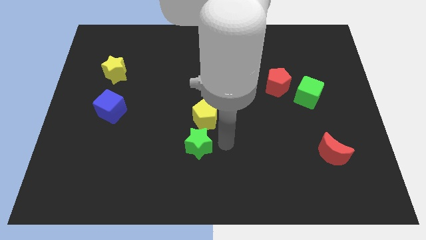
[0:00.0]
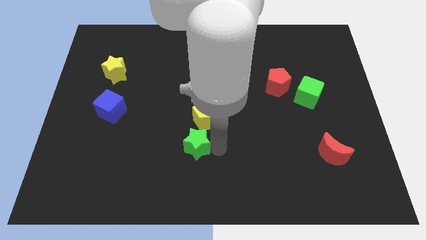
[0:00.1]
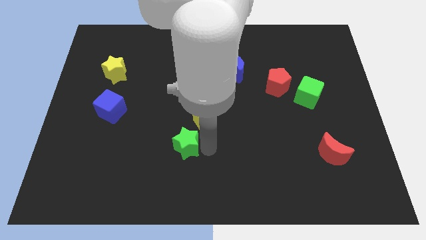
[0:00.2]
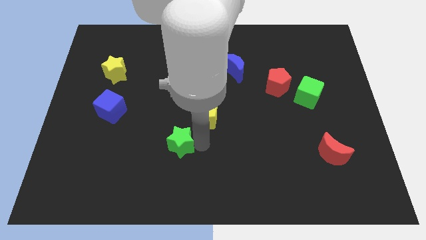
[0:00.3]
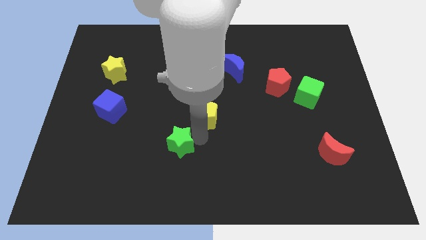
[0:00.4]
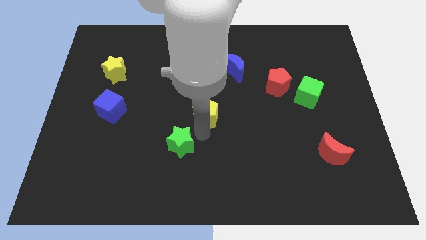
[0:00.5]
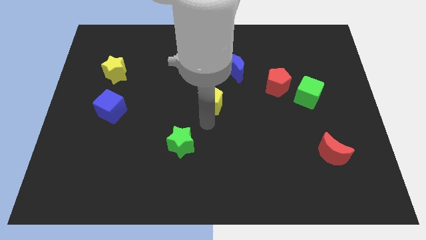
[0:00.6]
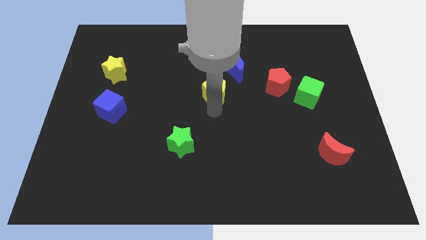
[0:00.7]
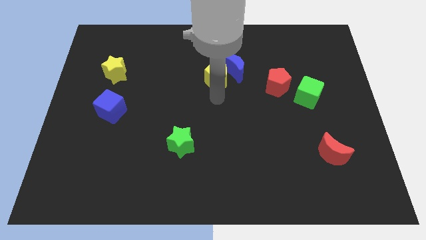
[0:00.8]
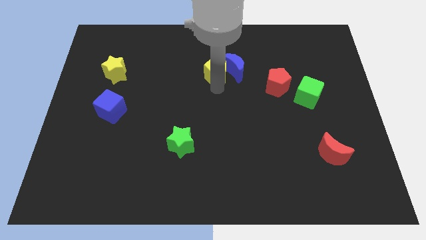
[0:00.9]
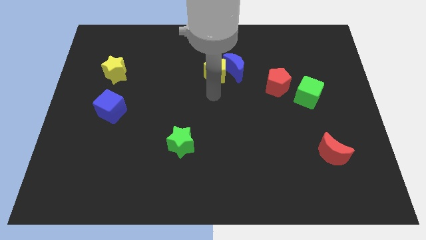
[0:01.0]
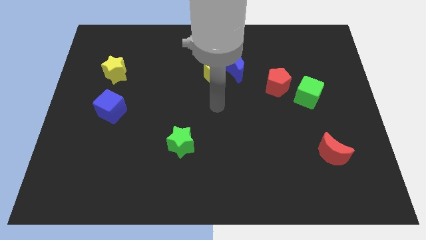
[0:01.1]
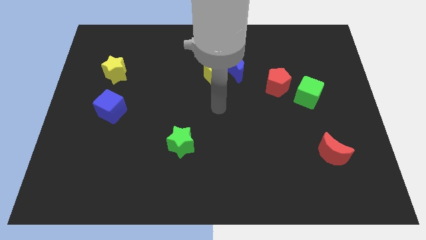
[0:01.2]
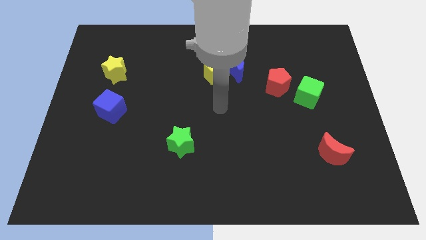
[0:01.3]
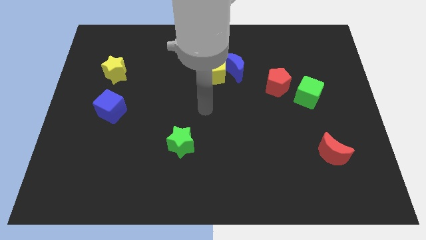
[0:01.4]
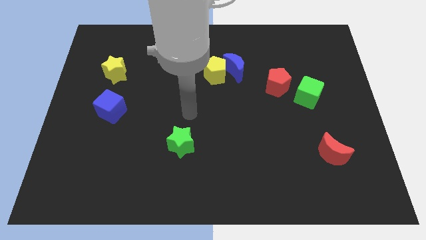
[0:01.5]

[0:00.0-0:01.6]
seperate the green star and yellow pentagon

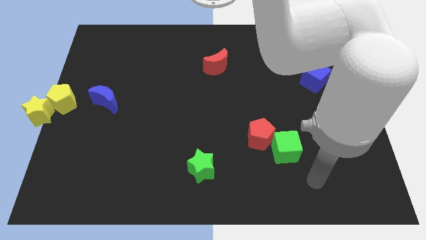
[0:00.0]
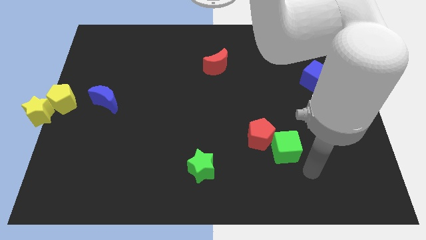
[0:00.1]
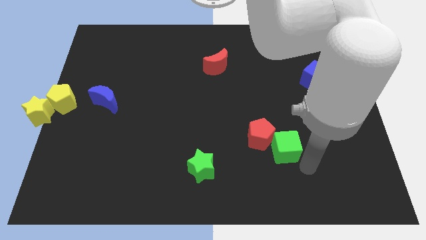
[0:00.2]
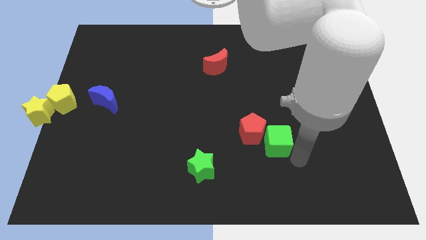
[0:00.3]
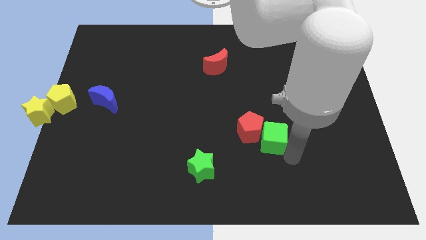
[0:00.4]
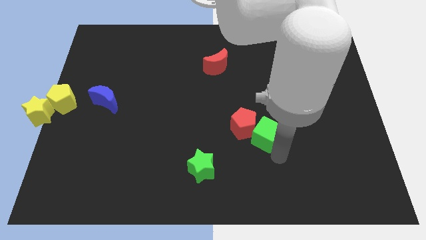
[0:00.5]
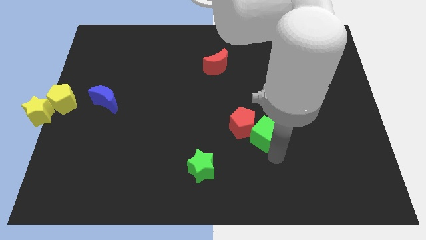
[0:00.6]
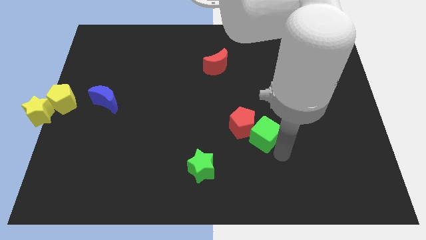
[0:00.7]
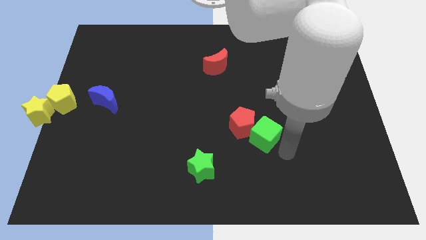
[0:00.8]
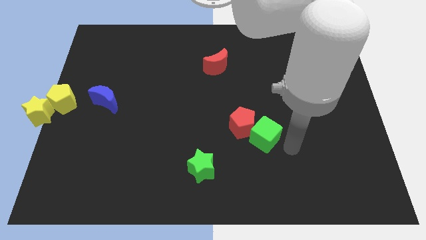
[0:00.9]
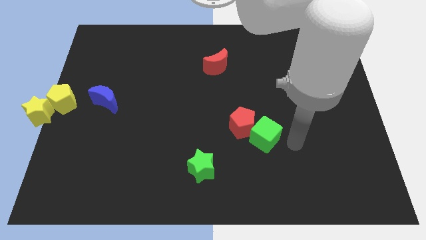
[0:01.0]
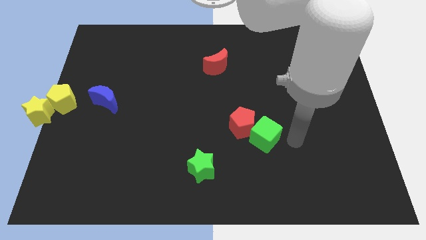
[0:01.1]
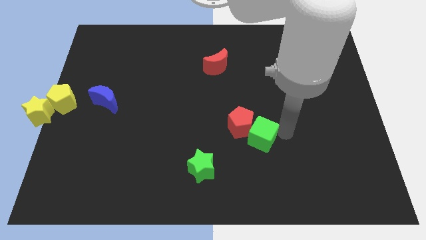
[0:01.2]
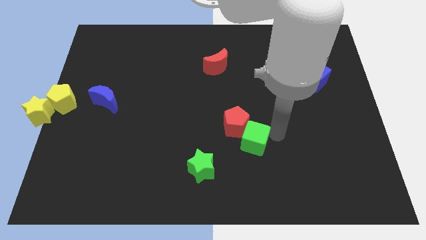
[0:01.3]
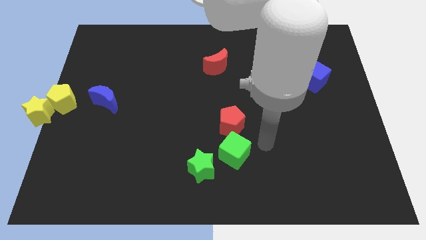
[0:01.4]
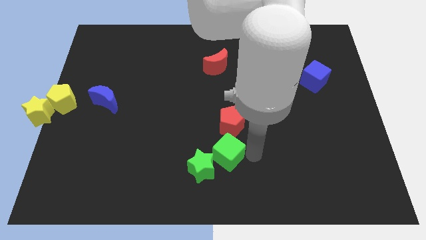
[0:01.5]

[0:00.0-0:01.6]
push the green cube to the bottom of the red pentagon

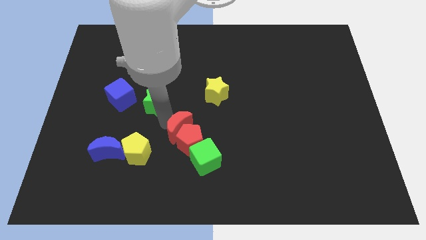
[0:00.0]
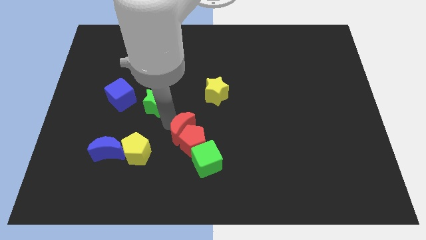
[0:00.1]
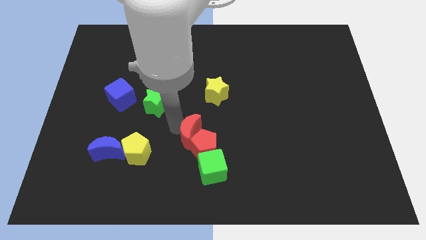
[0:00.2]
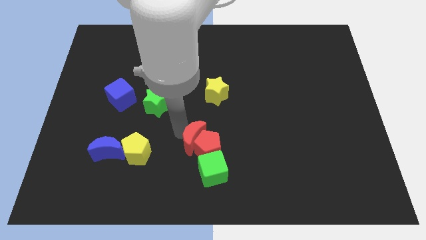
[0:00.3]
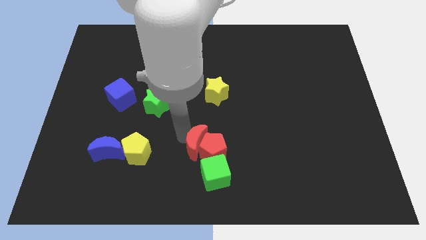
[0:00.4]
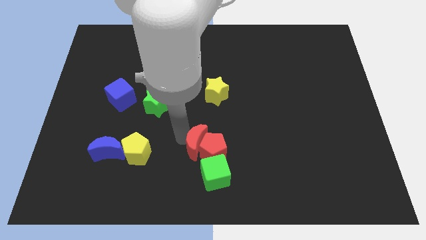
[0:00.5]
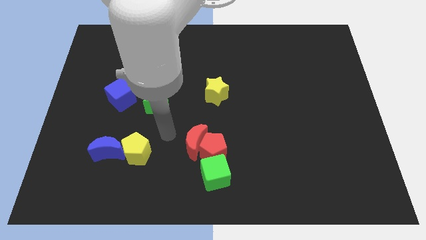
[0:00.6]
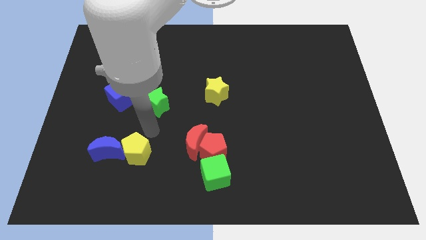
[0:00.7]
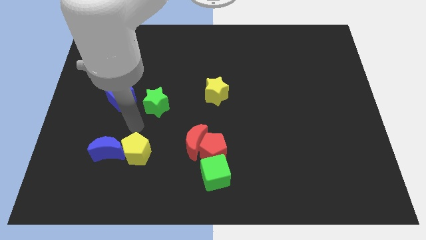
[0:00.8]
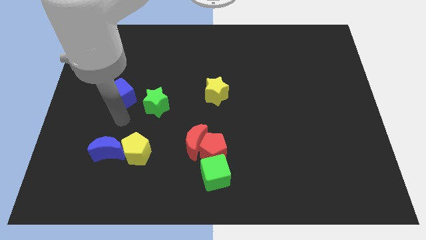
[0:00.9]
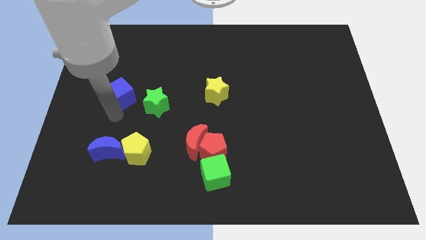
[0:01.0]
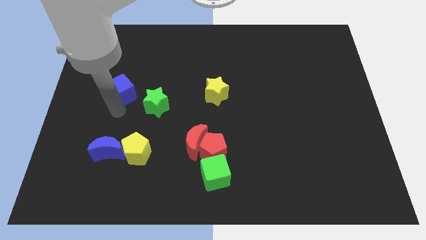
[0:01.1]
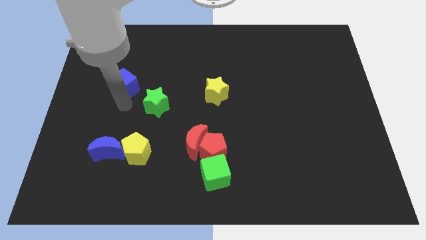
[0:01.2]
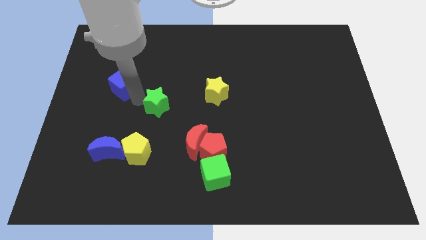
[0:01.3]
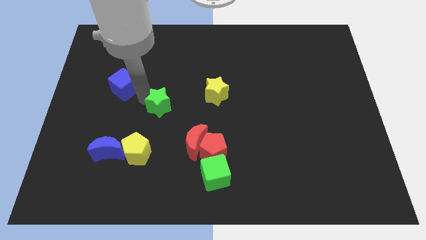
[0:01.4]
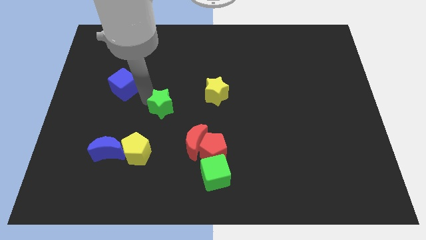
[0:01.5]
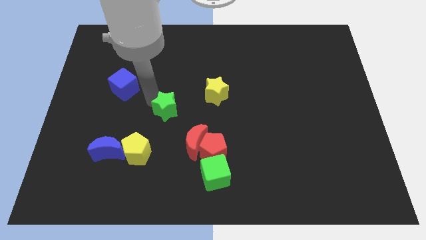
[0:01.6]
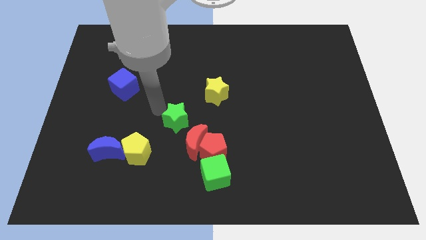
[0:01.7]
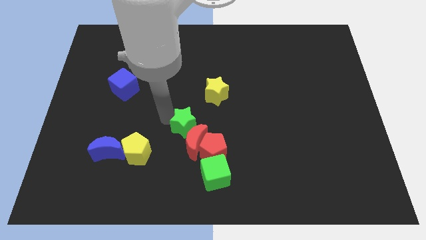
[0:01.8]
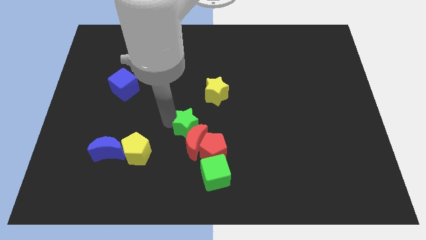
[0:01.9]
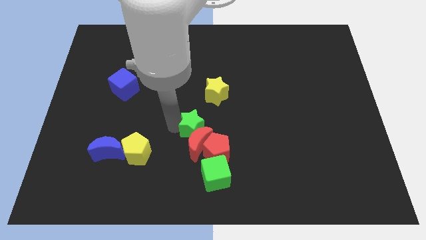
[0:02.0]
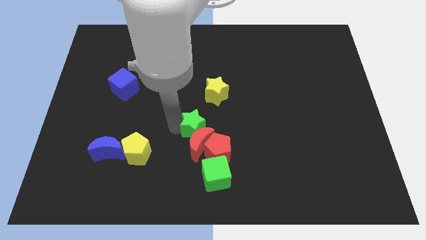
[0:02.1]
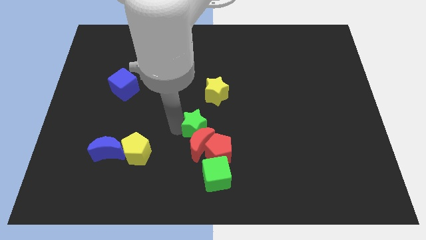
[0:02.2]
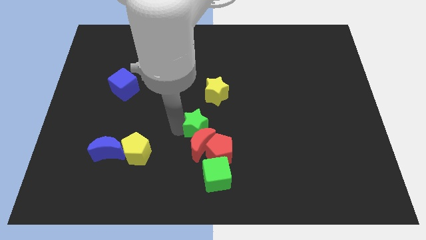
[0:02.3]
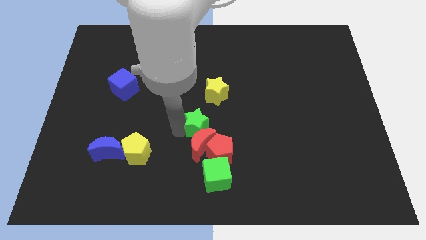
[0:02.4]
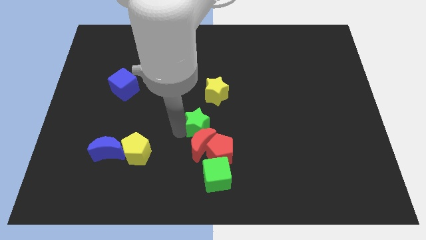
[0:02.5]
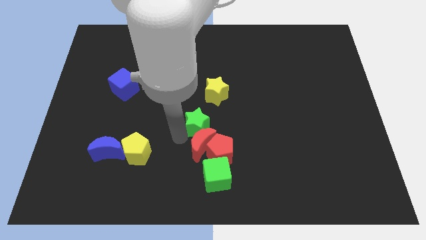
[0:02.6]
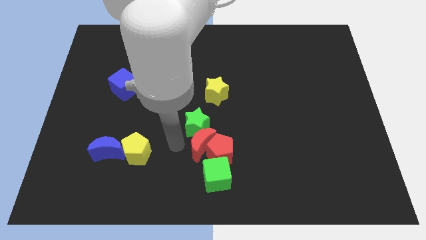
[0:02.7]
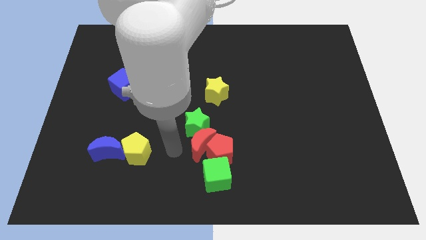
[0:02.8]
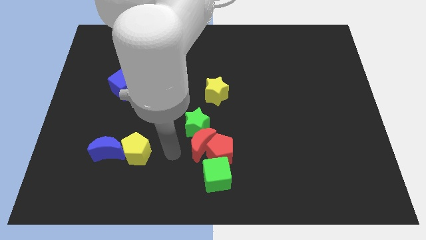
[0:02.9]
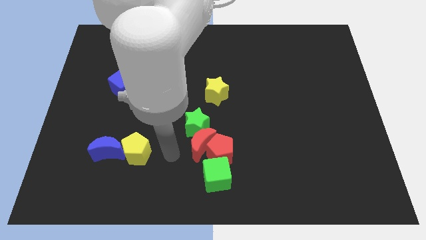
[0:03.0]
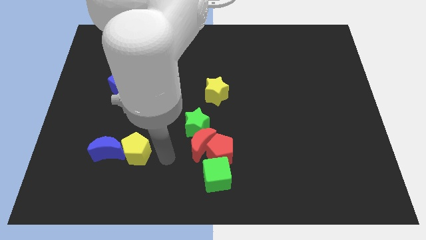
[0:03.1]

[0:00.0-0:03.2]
move the green star into the red pentagon

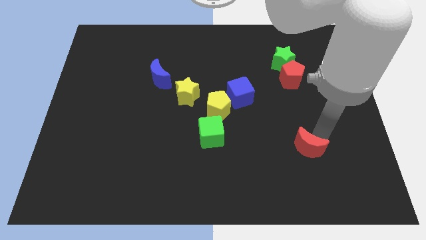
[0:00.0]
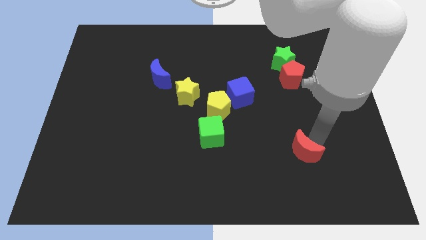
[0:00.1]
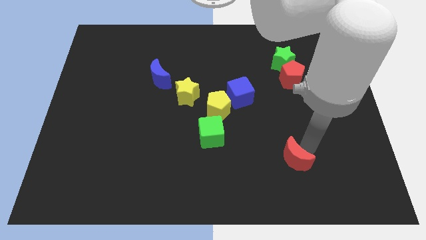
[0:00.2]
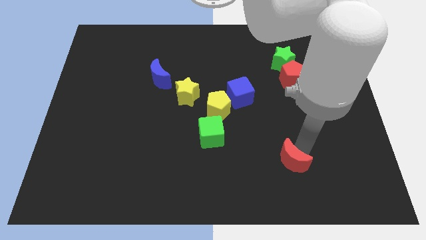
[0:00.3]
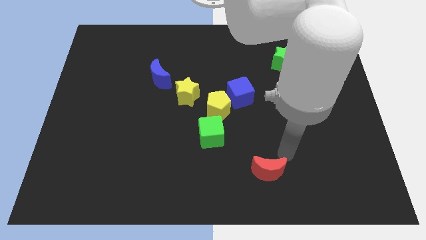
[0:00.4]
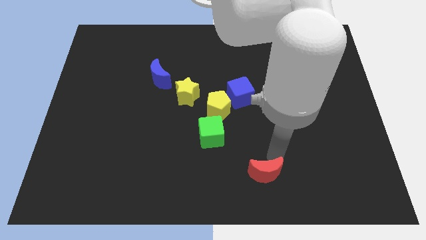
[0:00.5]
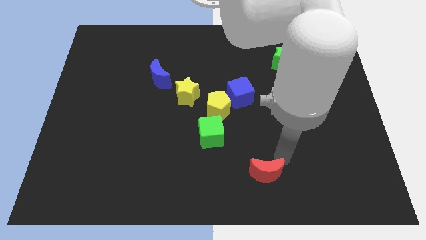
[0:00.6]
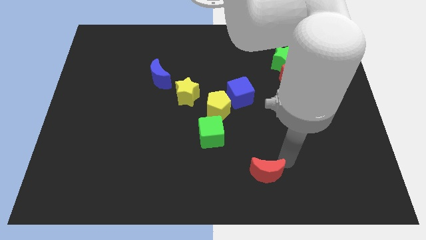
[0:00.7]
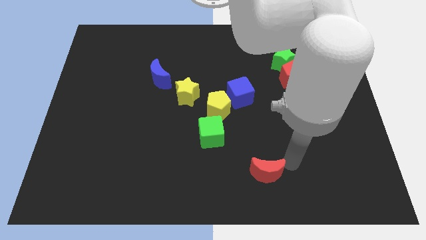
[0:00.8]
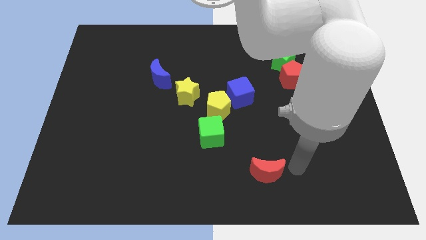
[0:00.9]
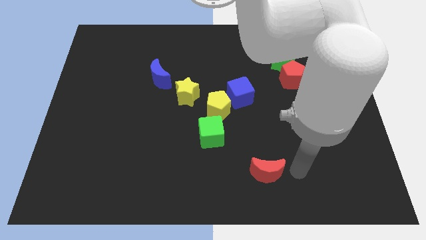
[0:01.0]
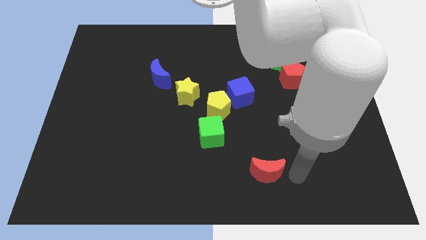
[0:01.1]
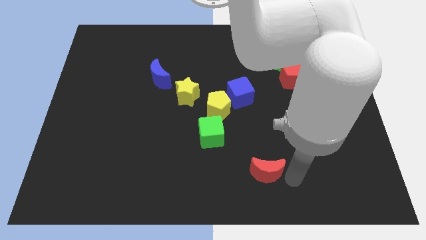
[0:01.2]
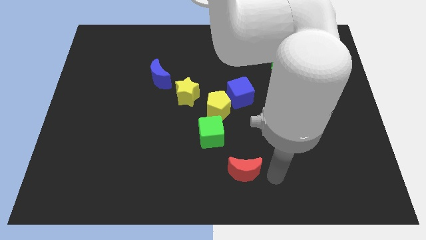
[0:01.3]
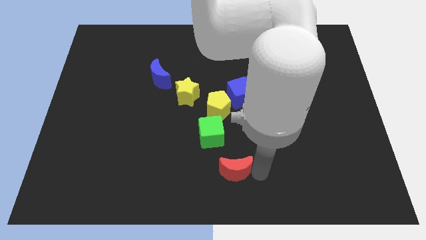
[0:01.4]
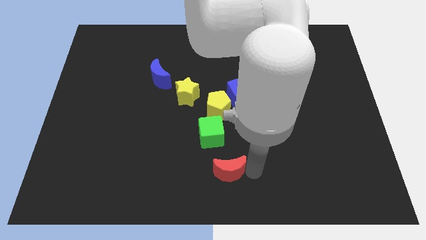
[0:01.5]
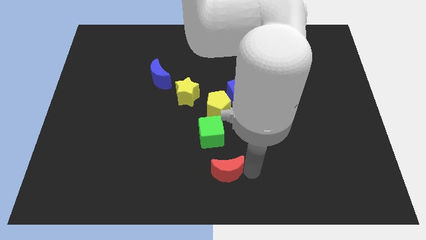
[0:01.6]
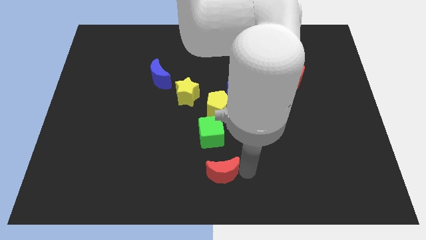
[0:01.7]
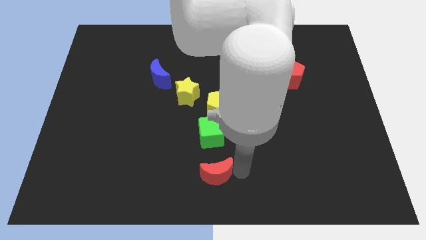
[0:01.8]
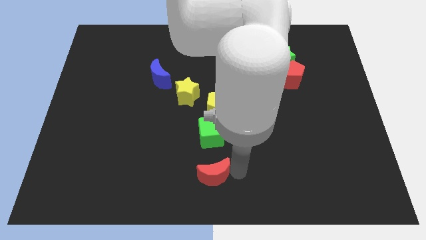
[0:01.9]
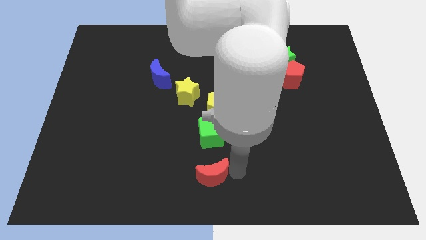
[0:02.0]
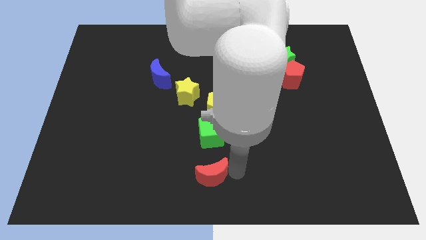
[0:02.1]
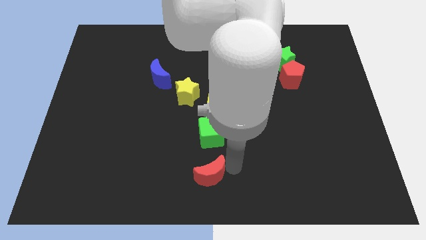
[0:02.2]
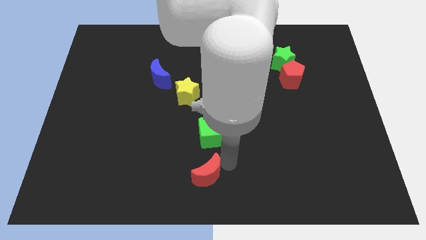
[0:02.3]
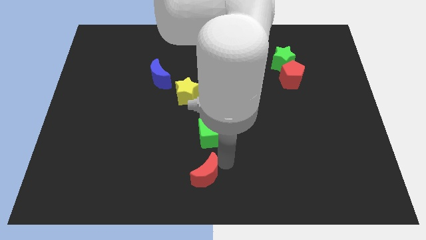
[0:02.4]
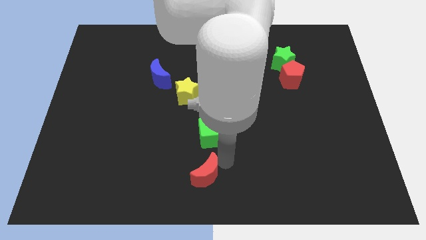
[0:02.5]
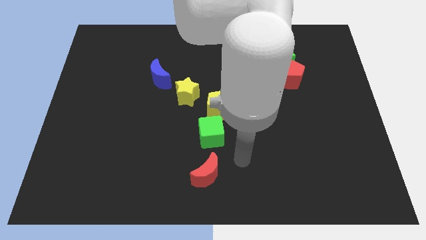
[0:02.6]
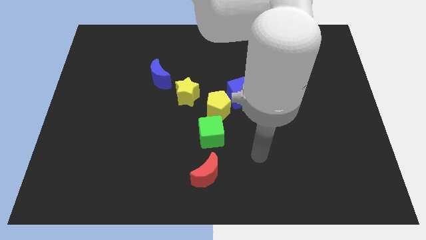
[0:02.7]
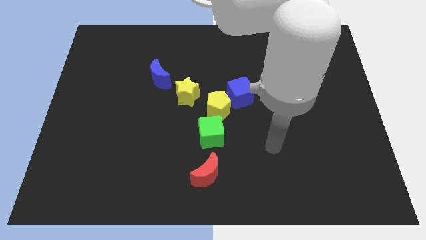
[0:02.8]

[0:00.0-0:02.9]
move the red moon towards the bottom center
